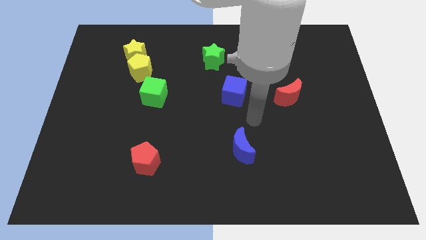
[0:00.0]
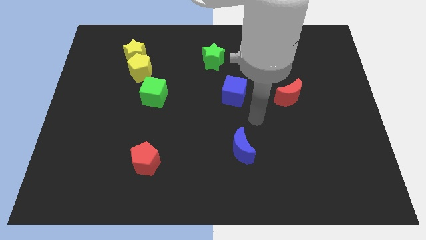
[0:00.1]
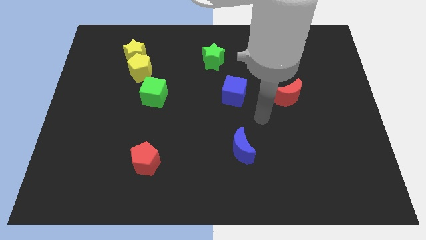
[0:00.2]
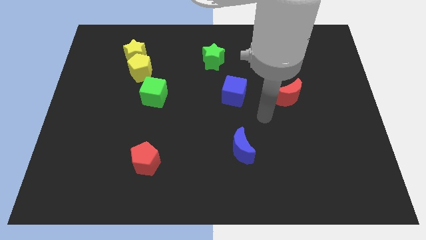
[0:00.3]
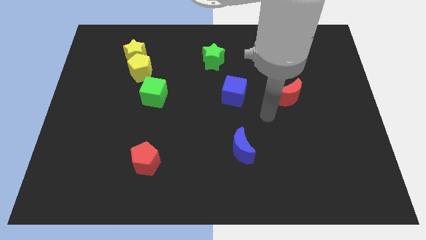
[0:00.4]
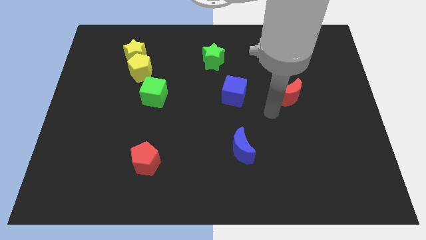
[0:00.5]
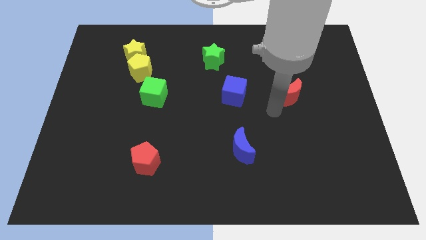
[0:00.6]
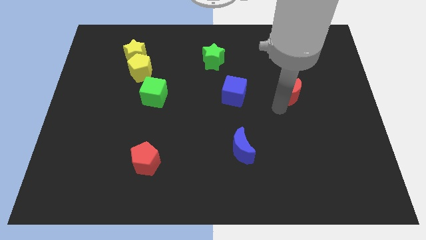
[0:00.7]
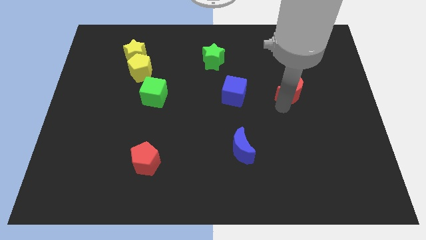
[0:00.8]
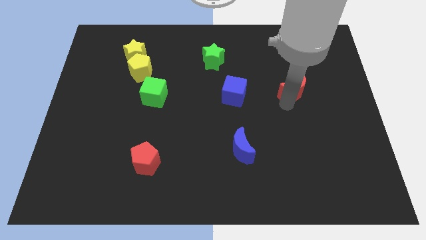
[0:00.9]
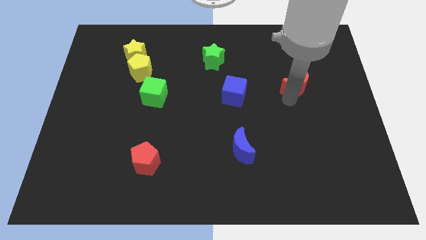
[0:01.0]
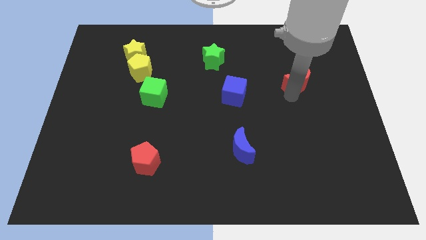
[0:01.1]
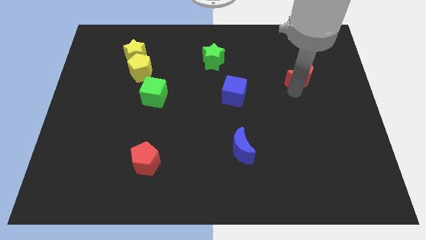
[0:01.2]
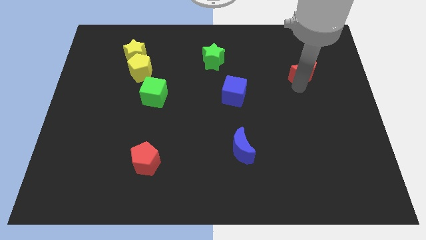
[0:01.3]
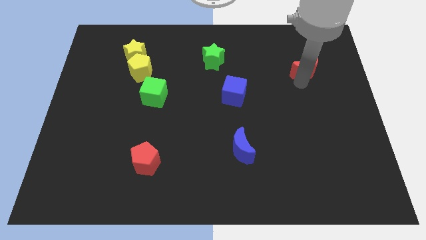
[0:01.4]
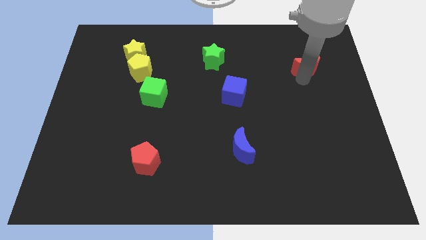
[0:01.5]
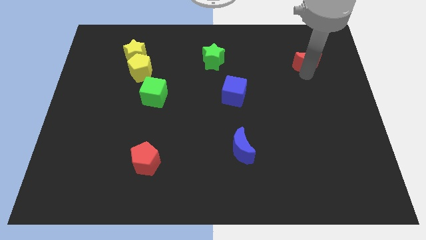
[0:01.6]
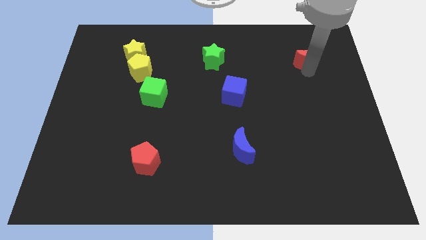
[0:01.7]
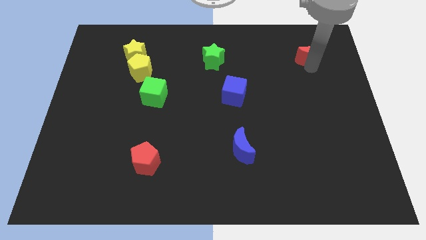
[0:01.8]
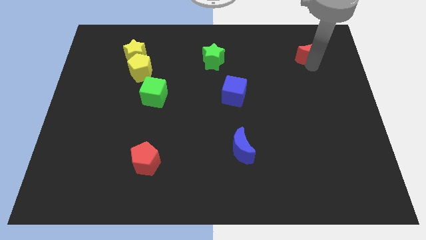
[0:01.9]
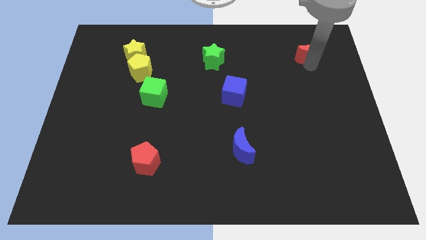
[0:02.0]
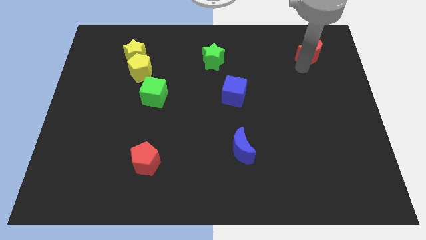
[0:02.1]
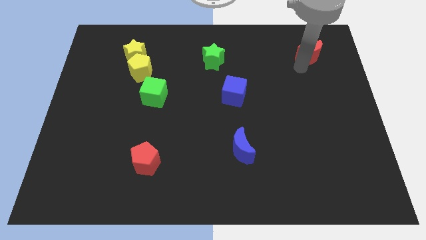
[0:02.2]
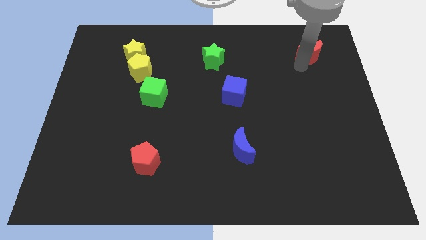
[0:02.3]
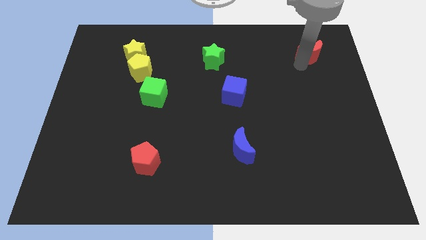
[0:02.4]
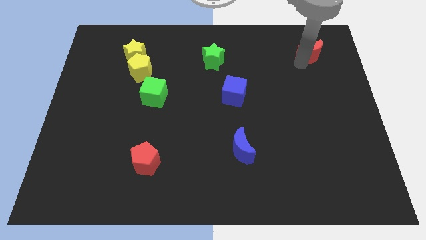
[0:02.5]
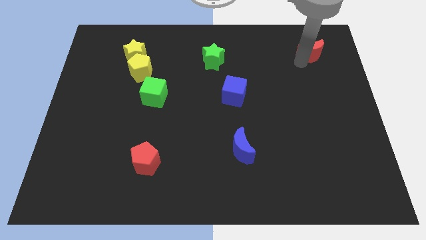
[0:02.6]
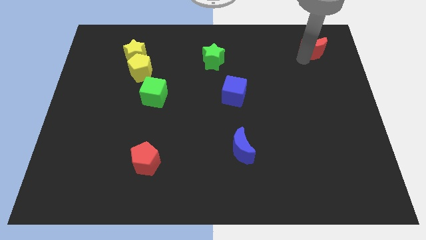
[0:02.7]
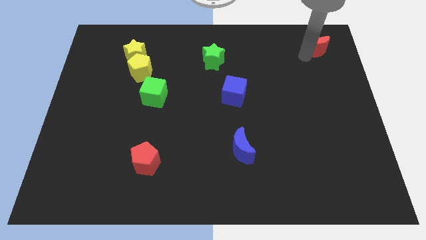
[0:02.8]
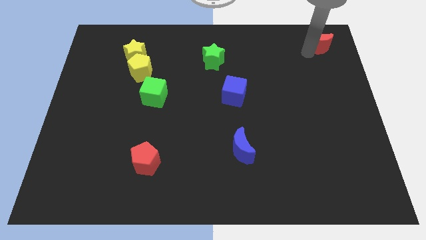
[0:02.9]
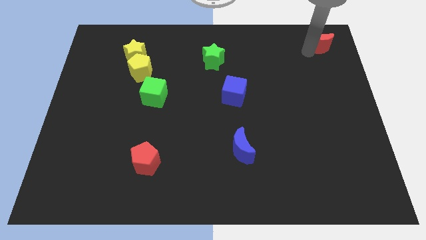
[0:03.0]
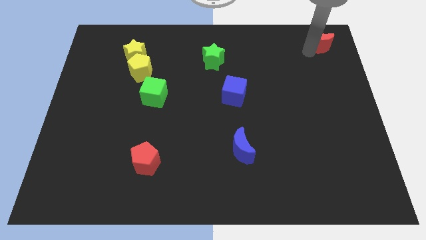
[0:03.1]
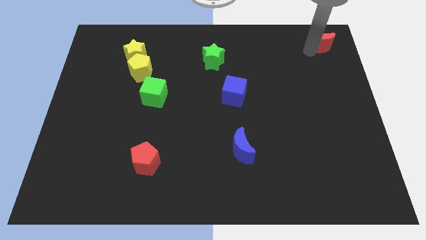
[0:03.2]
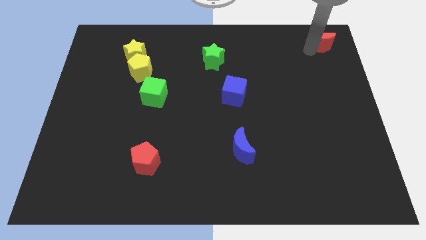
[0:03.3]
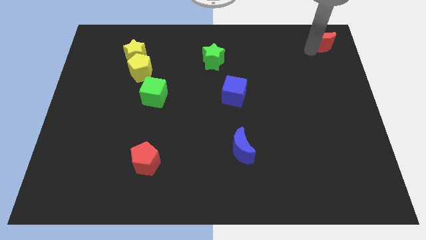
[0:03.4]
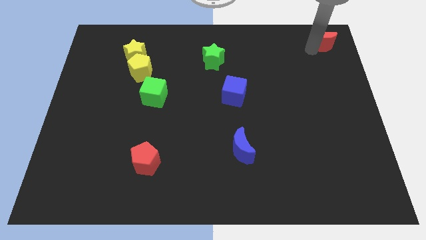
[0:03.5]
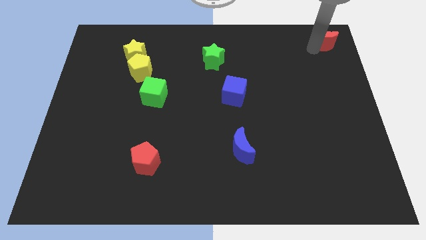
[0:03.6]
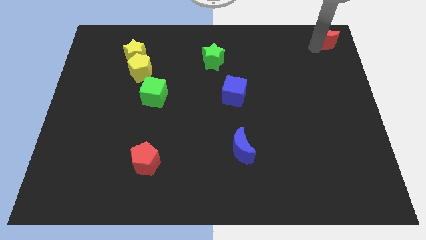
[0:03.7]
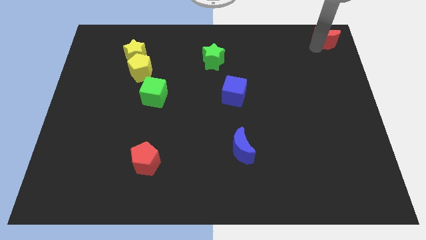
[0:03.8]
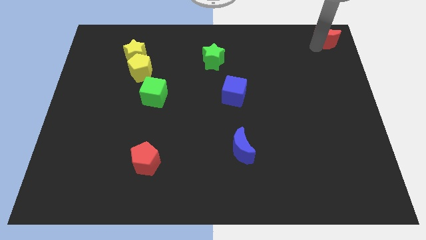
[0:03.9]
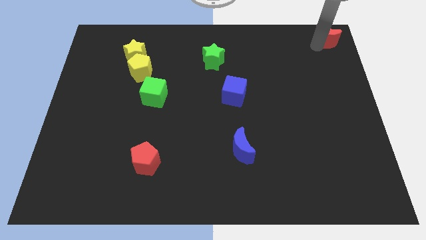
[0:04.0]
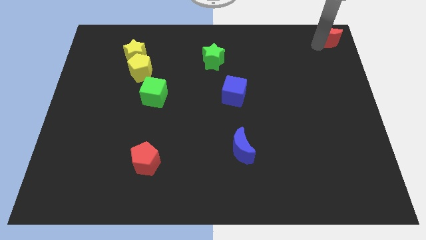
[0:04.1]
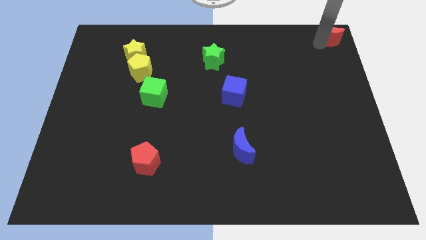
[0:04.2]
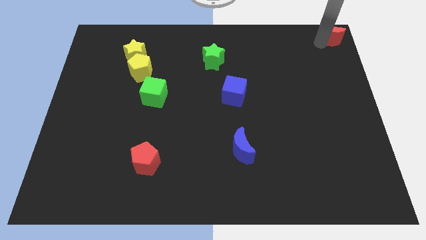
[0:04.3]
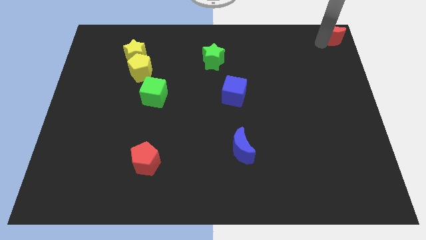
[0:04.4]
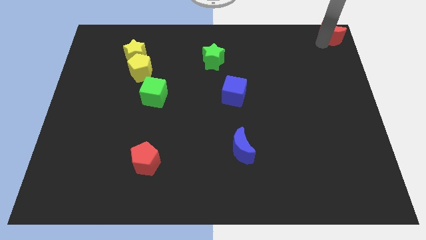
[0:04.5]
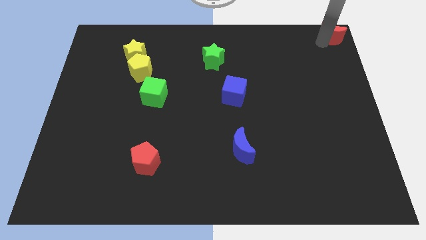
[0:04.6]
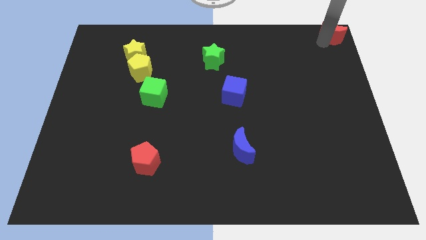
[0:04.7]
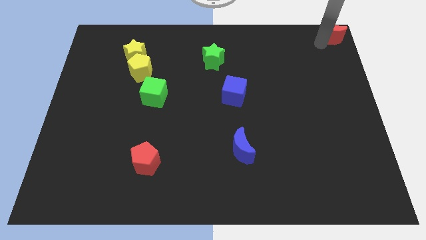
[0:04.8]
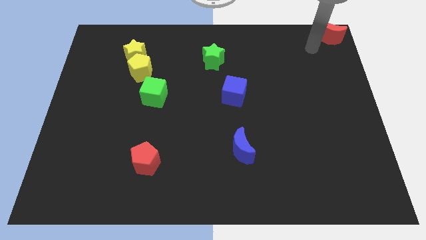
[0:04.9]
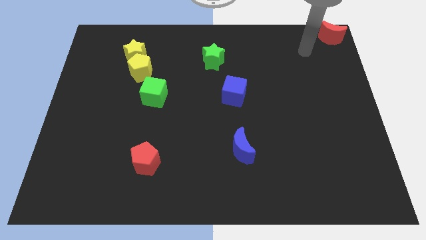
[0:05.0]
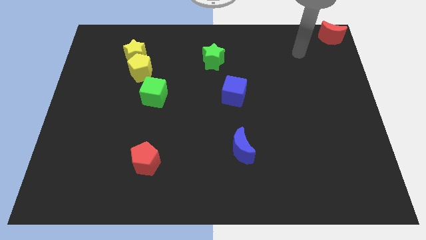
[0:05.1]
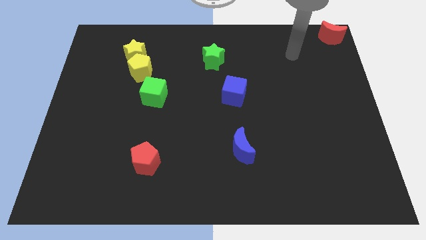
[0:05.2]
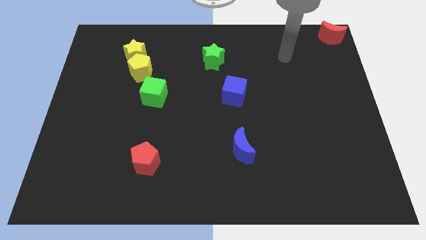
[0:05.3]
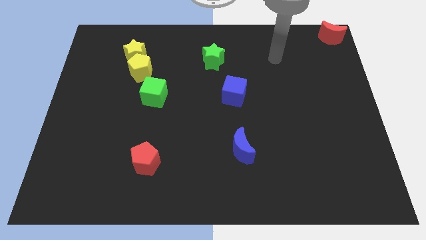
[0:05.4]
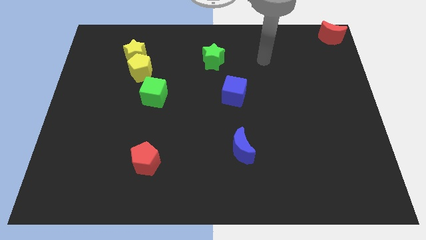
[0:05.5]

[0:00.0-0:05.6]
push the red crescent to the top right corner

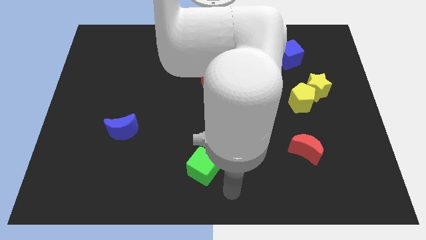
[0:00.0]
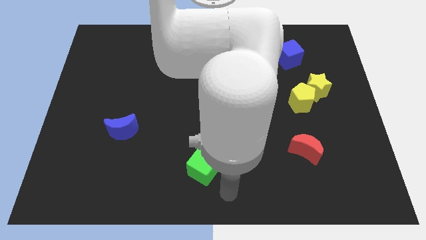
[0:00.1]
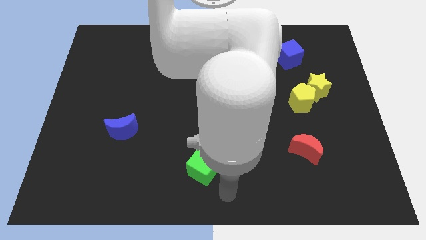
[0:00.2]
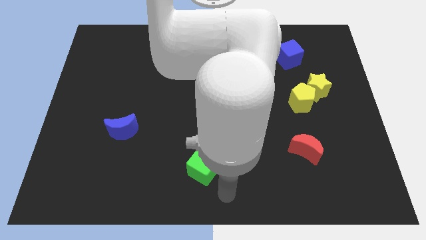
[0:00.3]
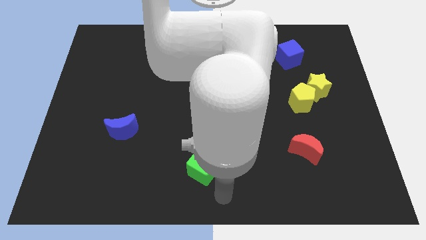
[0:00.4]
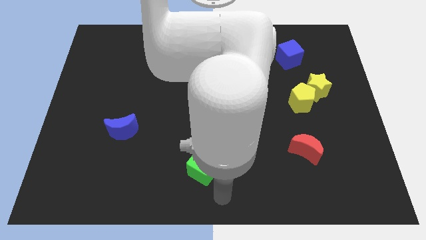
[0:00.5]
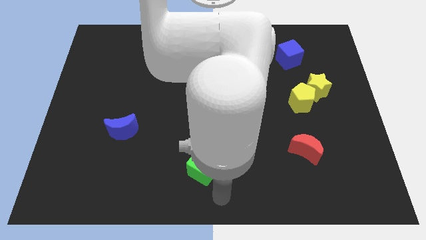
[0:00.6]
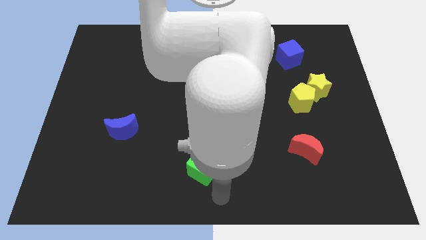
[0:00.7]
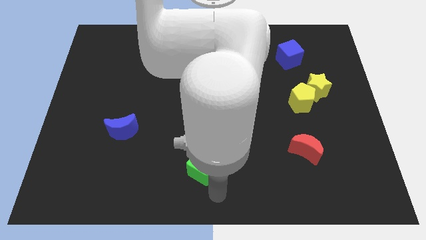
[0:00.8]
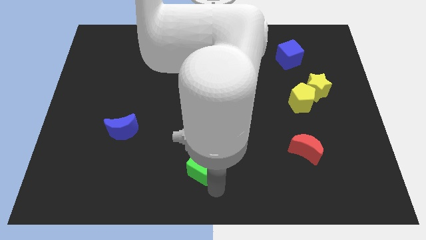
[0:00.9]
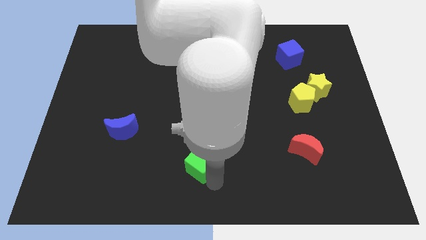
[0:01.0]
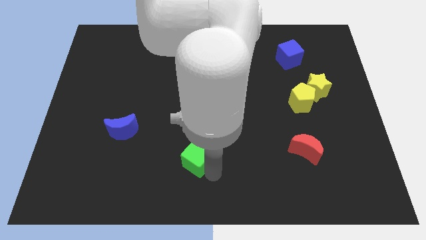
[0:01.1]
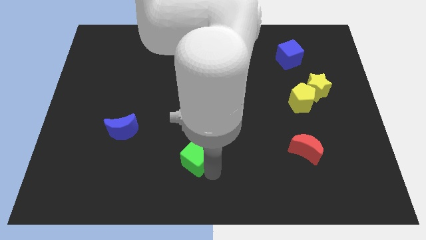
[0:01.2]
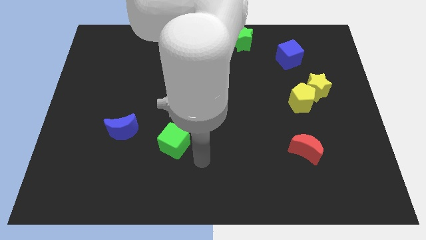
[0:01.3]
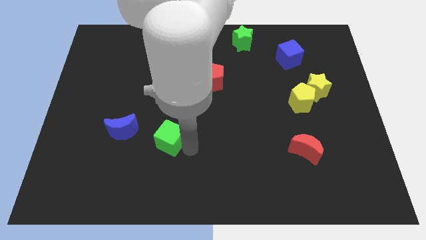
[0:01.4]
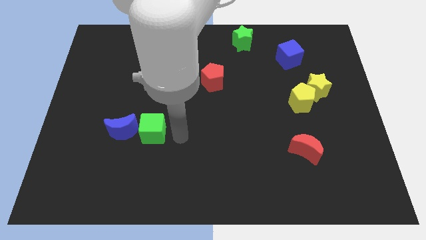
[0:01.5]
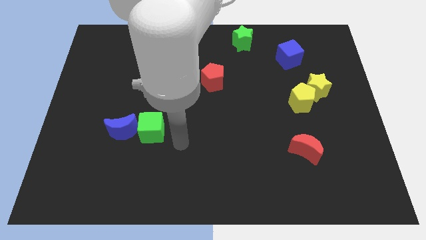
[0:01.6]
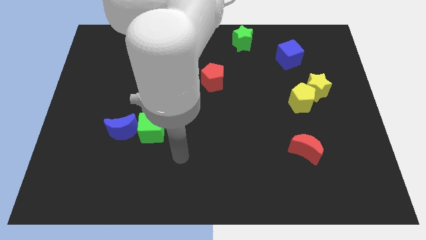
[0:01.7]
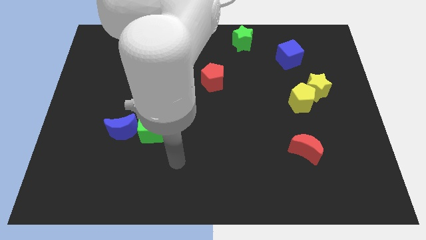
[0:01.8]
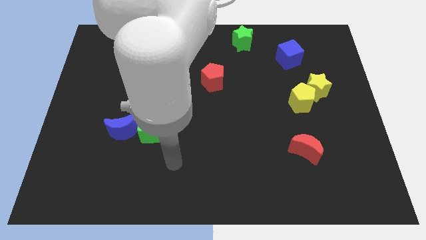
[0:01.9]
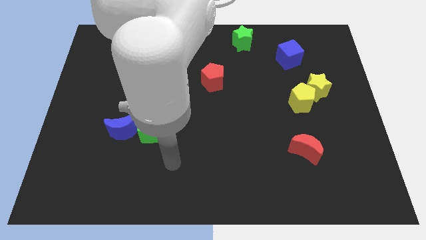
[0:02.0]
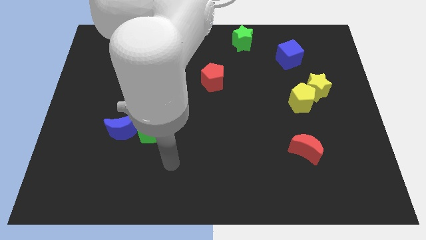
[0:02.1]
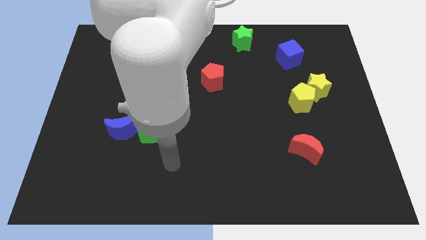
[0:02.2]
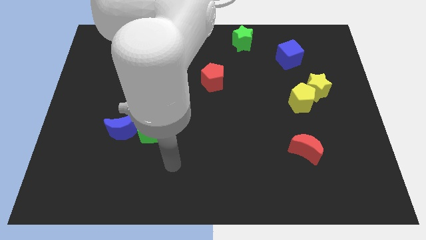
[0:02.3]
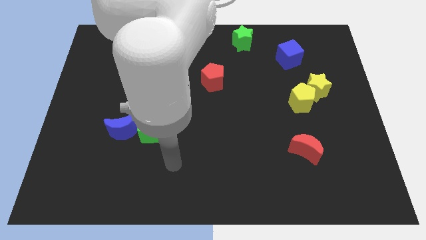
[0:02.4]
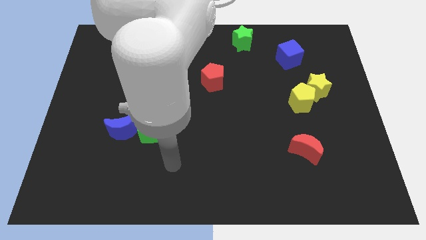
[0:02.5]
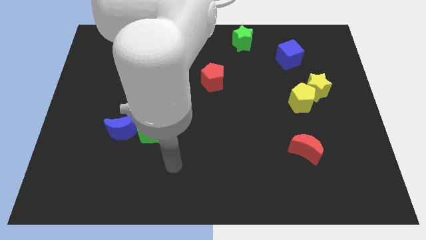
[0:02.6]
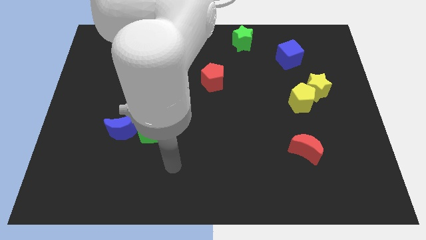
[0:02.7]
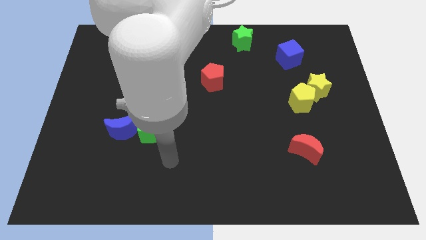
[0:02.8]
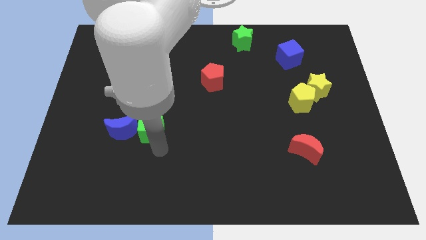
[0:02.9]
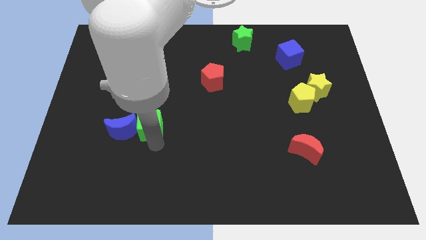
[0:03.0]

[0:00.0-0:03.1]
place green cube to the right of blue moon

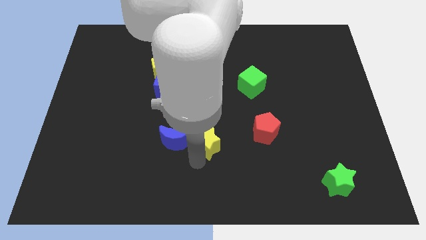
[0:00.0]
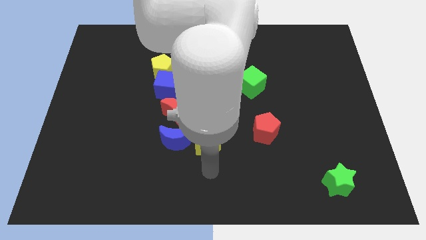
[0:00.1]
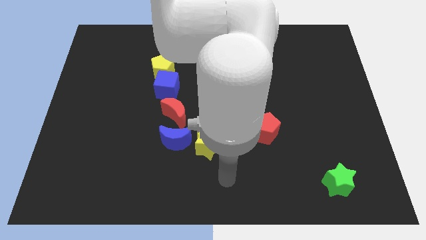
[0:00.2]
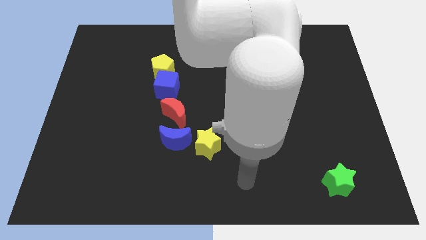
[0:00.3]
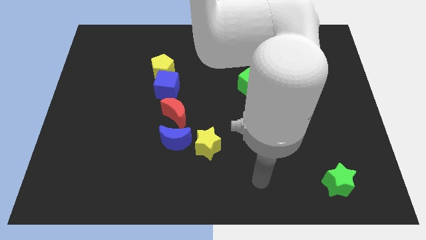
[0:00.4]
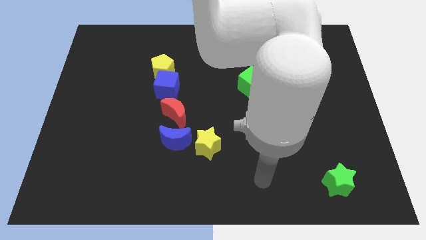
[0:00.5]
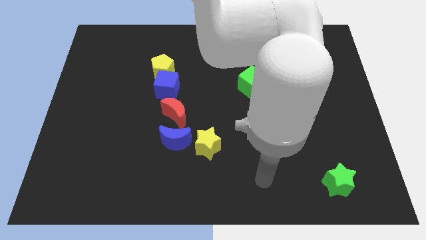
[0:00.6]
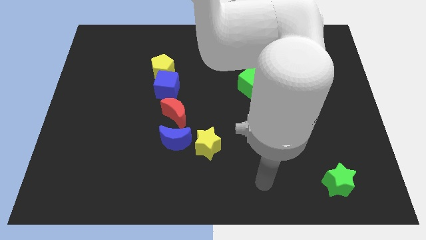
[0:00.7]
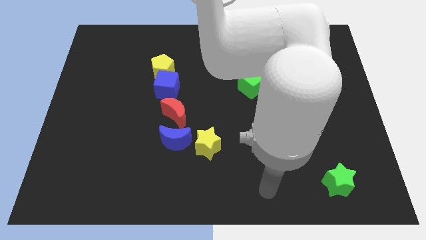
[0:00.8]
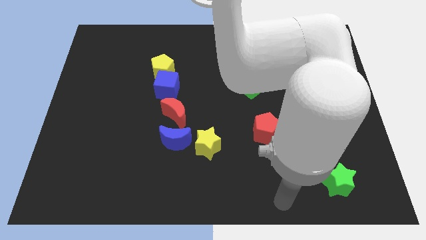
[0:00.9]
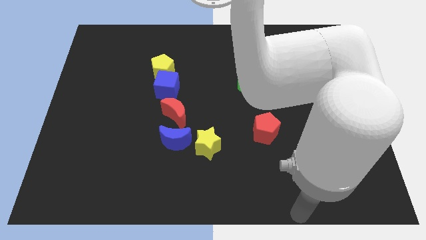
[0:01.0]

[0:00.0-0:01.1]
move your hand away from the yellow star
